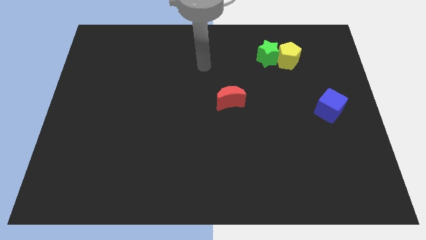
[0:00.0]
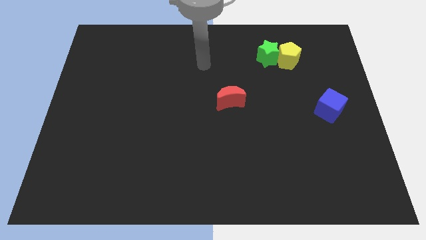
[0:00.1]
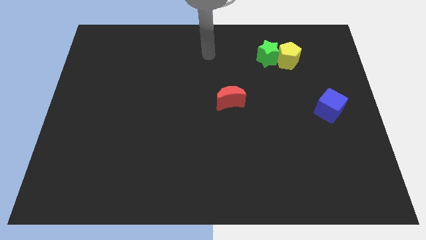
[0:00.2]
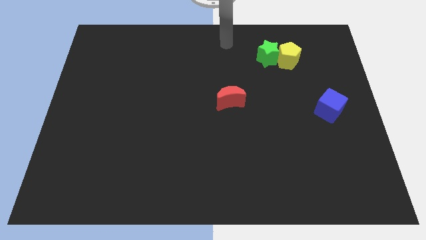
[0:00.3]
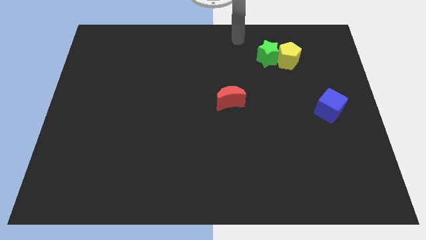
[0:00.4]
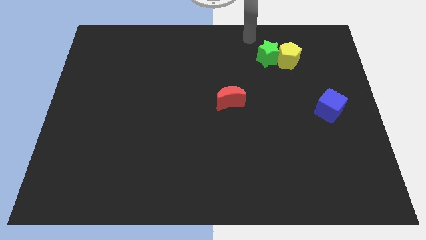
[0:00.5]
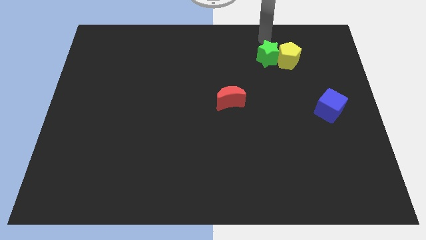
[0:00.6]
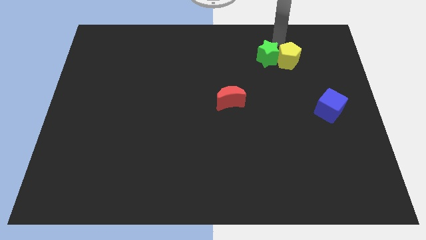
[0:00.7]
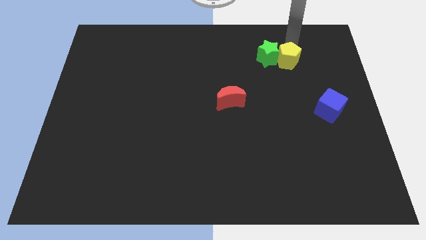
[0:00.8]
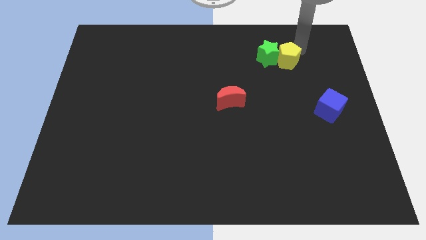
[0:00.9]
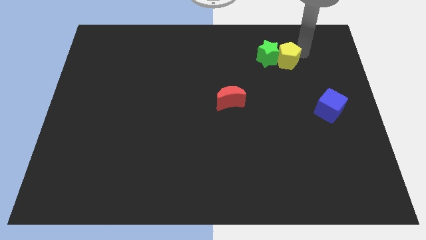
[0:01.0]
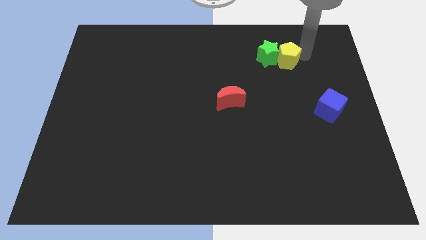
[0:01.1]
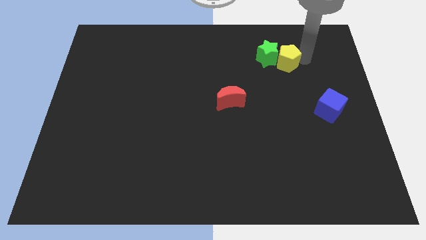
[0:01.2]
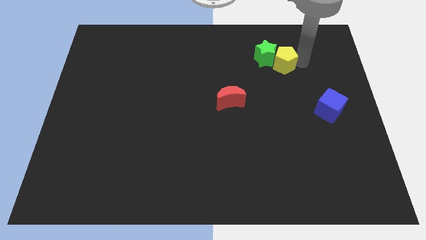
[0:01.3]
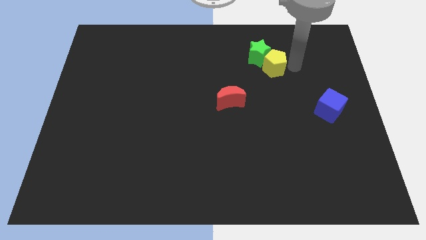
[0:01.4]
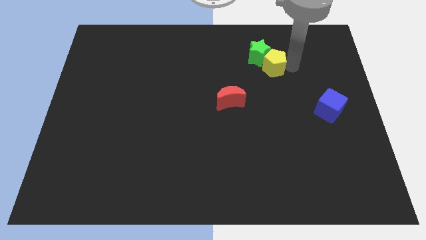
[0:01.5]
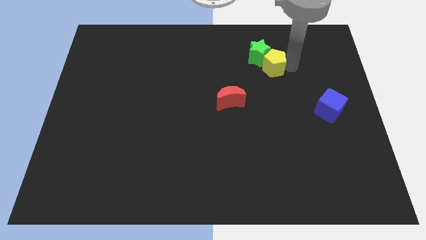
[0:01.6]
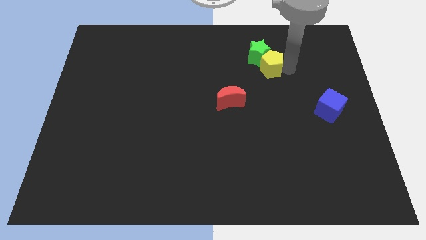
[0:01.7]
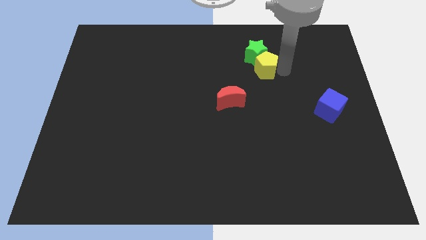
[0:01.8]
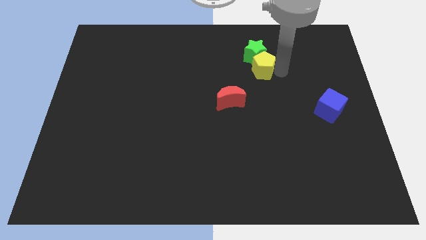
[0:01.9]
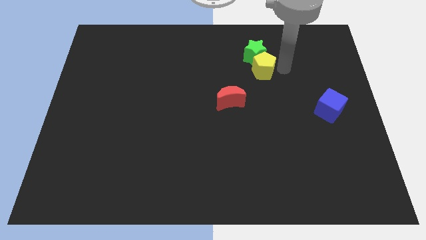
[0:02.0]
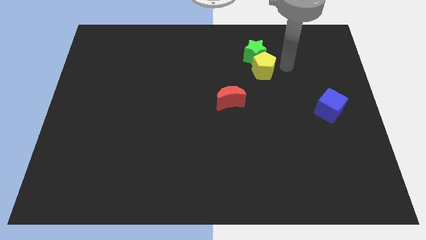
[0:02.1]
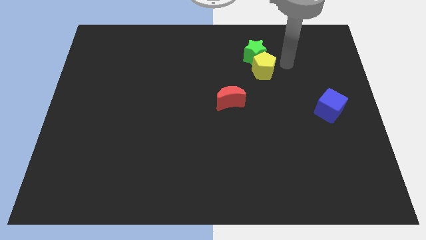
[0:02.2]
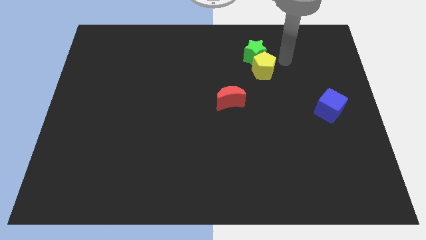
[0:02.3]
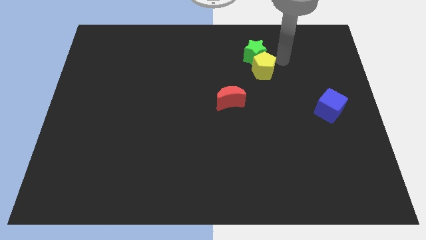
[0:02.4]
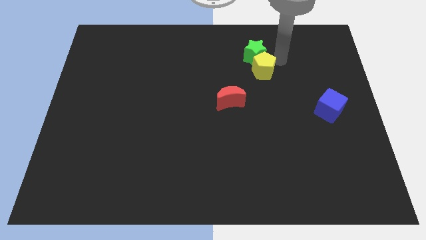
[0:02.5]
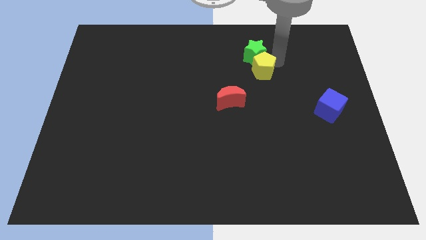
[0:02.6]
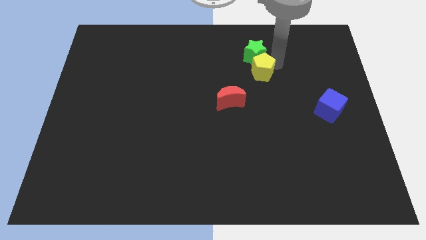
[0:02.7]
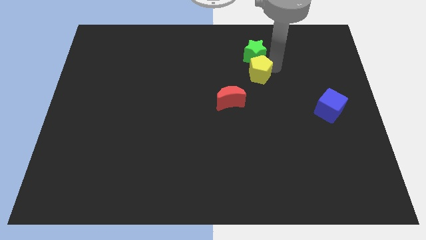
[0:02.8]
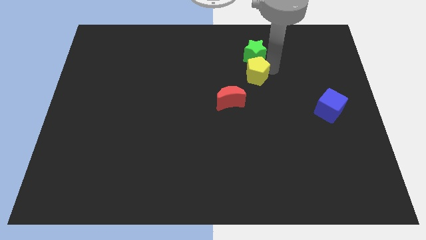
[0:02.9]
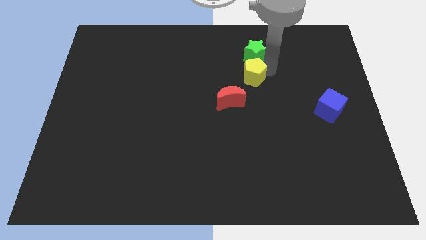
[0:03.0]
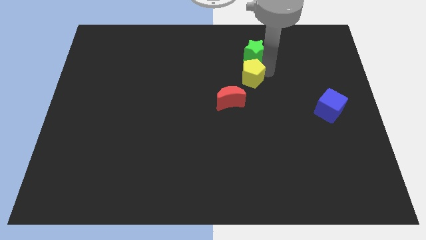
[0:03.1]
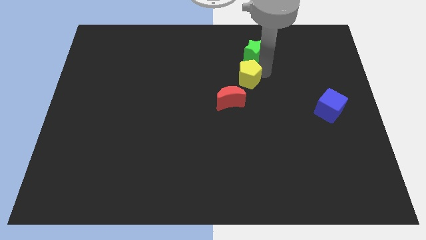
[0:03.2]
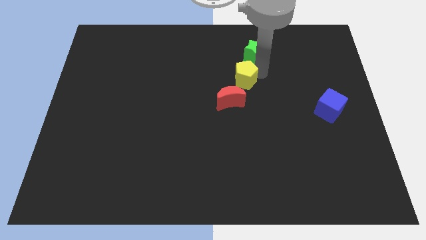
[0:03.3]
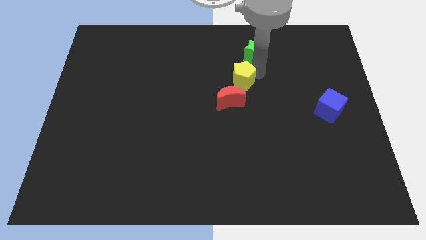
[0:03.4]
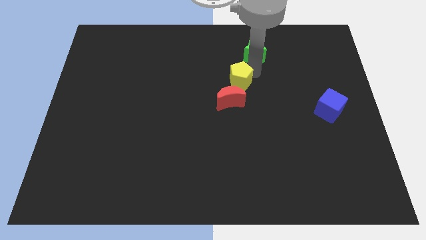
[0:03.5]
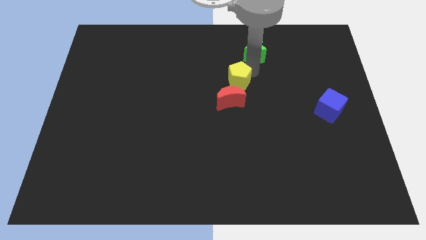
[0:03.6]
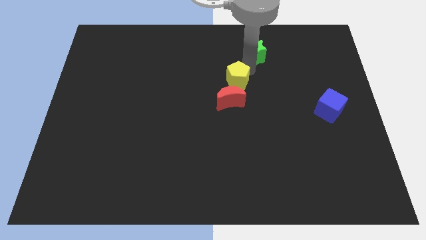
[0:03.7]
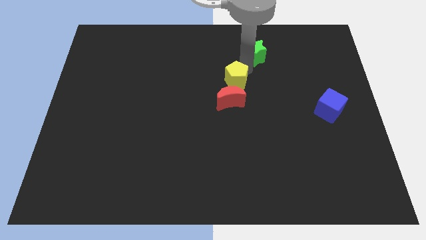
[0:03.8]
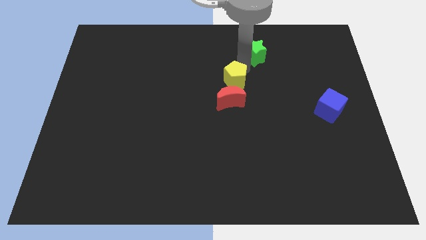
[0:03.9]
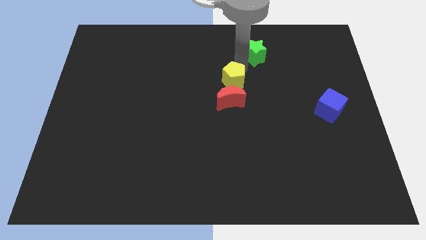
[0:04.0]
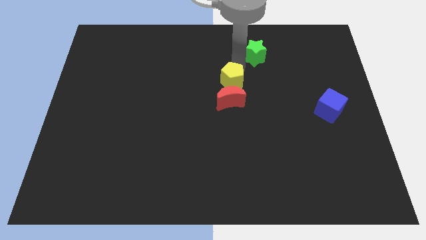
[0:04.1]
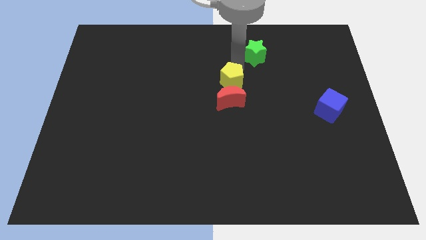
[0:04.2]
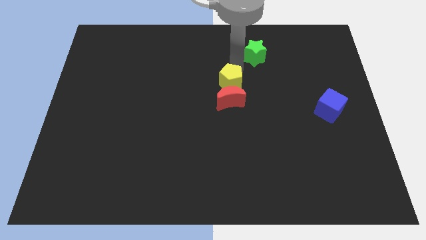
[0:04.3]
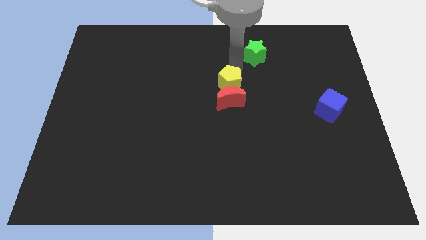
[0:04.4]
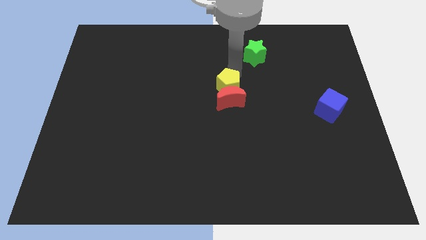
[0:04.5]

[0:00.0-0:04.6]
put the yellow block towards the red moon

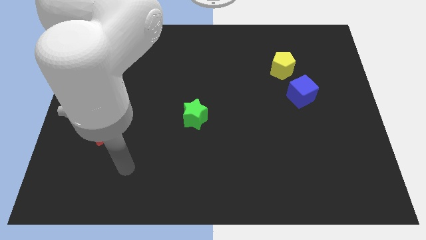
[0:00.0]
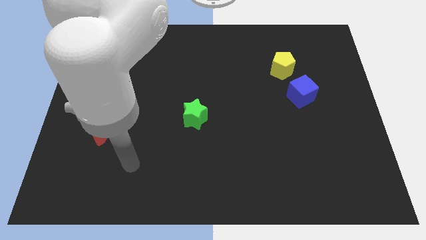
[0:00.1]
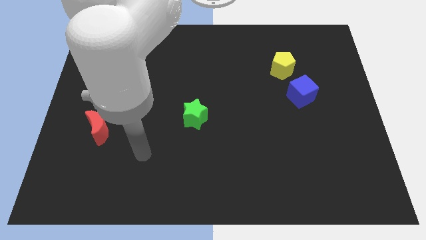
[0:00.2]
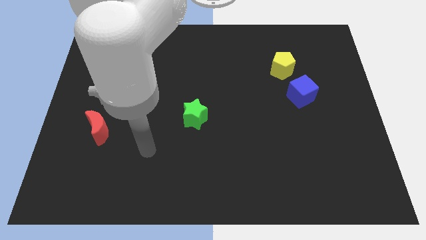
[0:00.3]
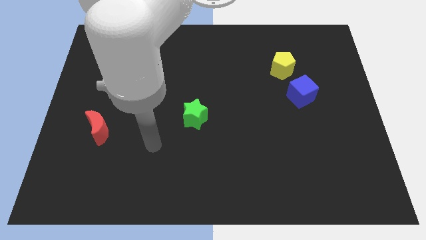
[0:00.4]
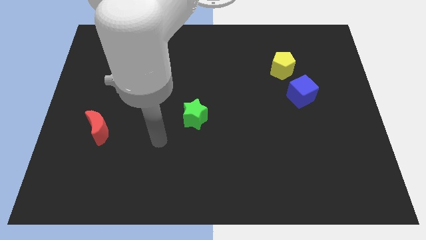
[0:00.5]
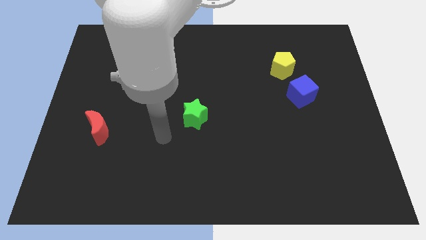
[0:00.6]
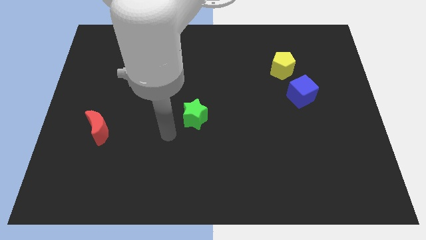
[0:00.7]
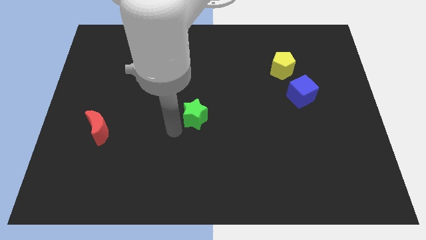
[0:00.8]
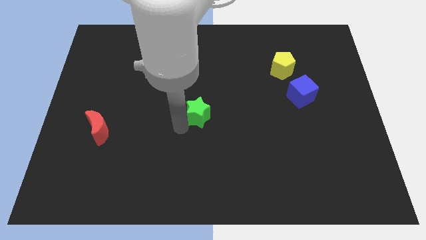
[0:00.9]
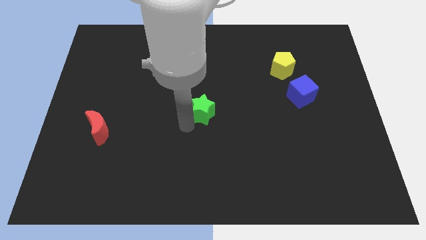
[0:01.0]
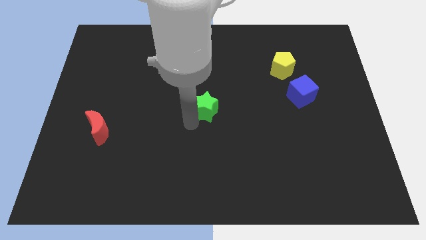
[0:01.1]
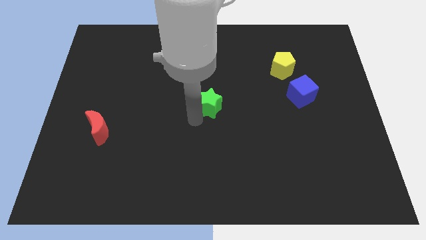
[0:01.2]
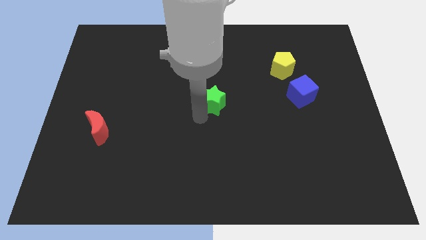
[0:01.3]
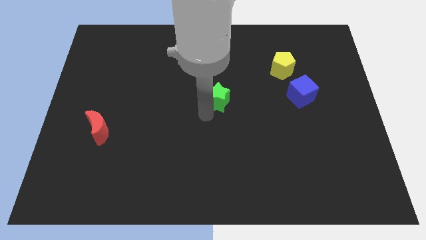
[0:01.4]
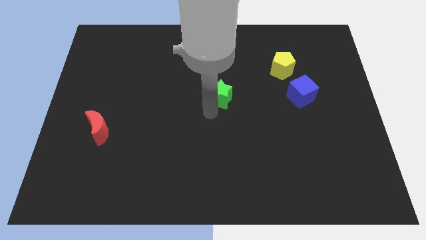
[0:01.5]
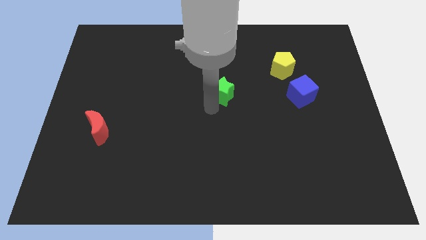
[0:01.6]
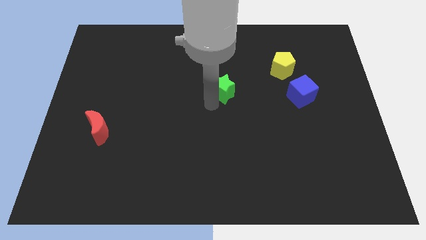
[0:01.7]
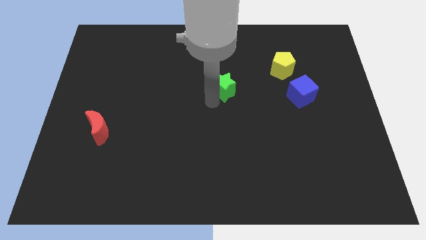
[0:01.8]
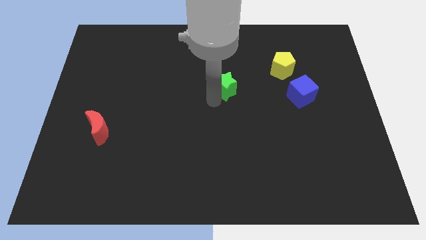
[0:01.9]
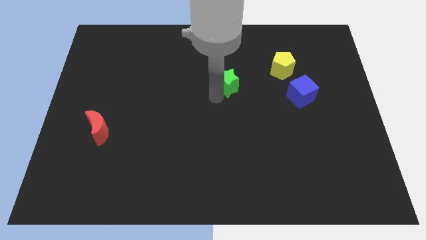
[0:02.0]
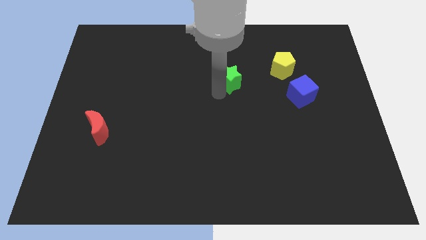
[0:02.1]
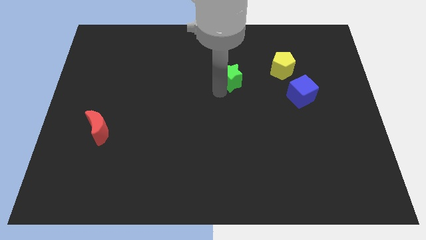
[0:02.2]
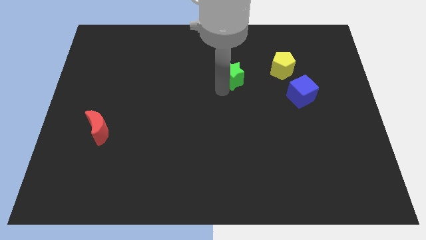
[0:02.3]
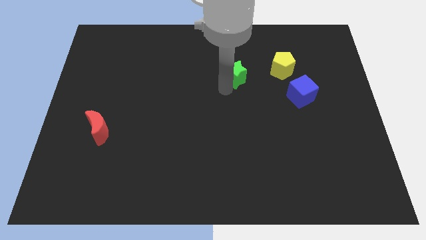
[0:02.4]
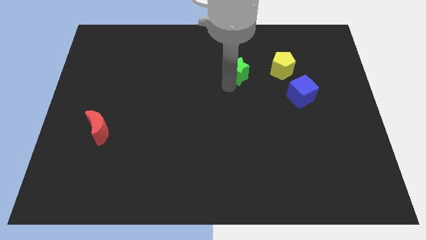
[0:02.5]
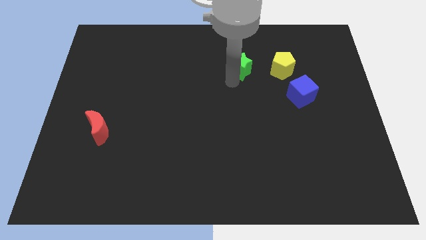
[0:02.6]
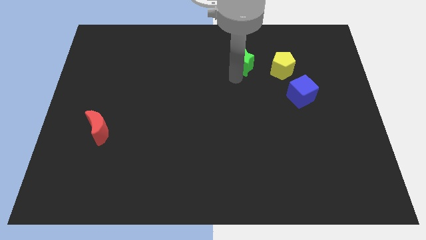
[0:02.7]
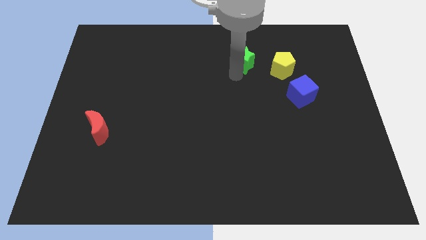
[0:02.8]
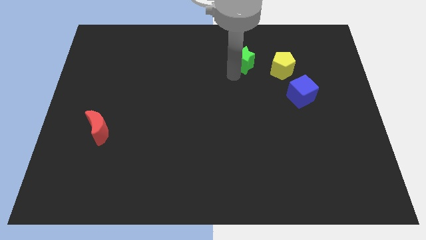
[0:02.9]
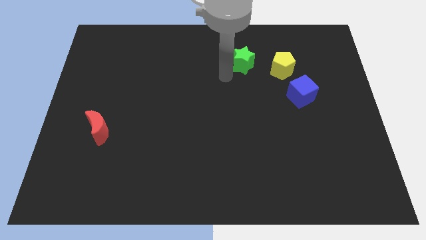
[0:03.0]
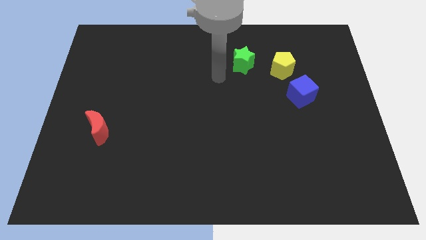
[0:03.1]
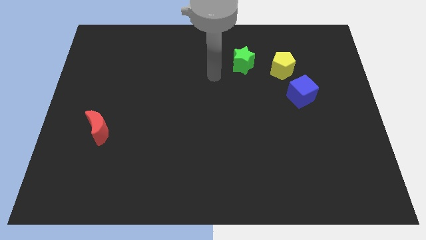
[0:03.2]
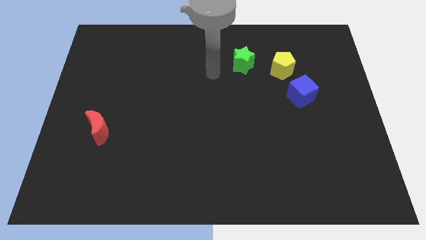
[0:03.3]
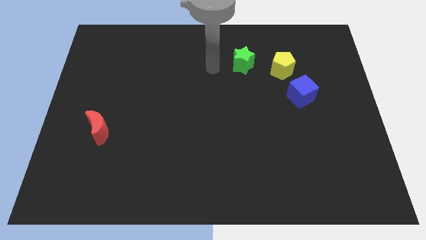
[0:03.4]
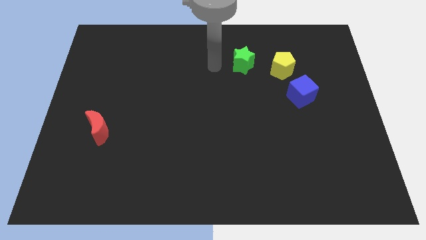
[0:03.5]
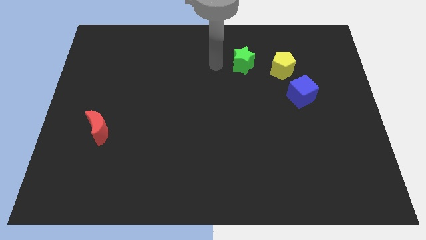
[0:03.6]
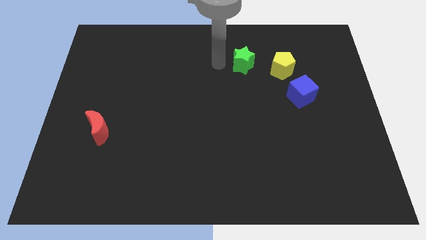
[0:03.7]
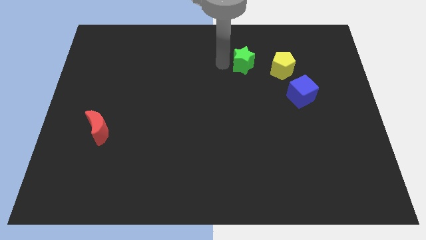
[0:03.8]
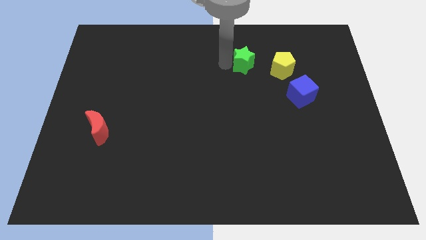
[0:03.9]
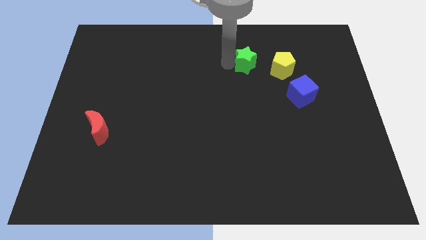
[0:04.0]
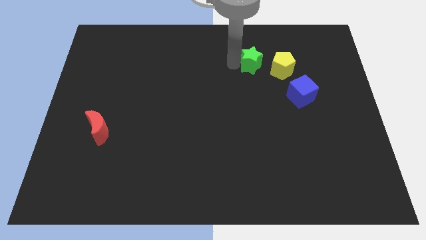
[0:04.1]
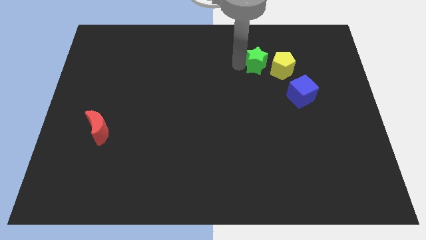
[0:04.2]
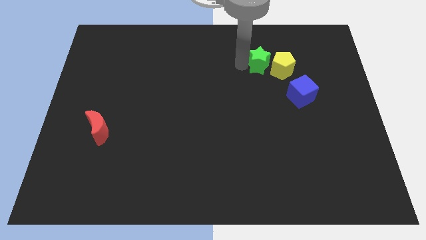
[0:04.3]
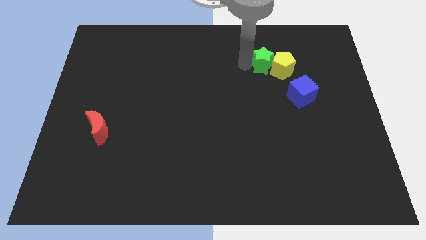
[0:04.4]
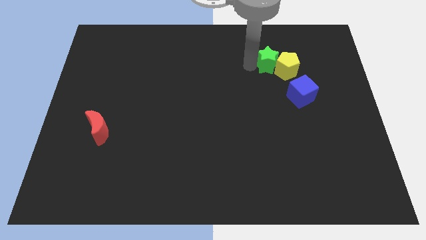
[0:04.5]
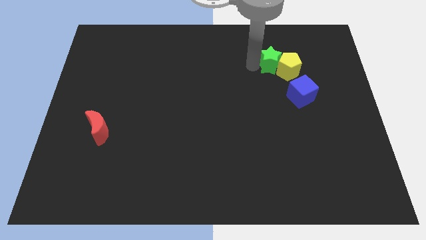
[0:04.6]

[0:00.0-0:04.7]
move the green block towards the yellow pentagon
